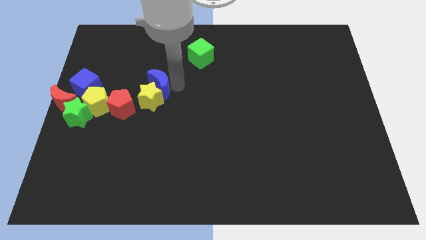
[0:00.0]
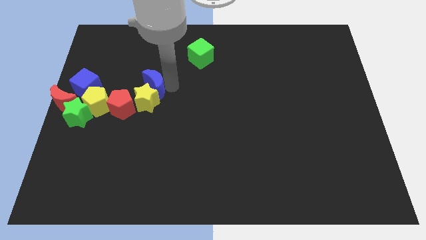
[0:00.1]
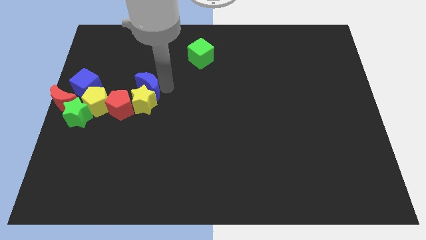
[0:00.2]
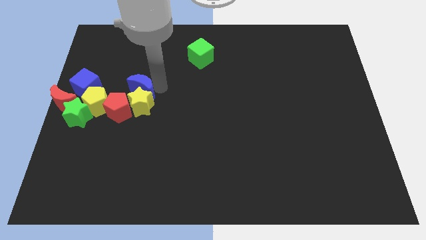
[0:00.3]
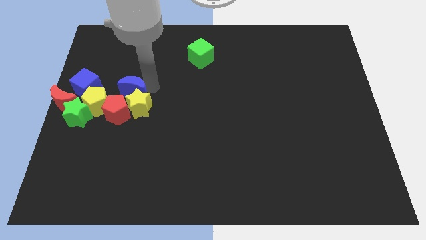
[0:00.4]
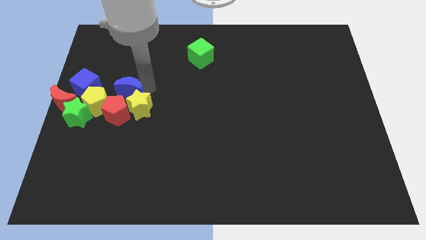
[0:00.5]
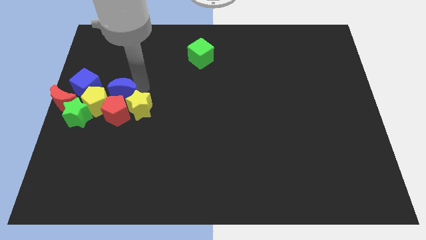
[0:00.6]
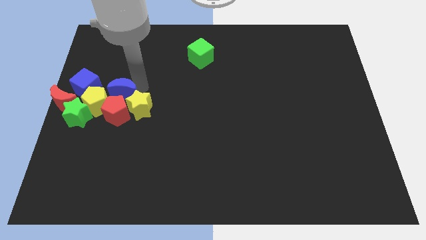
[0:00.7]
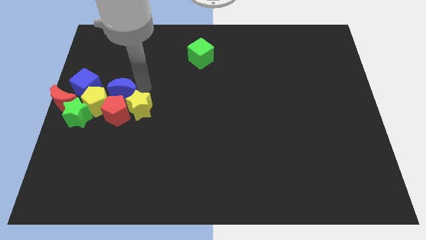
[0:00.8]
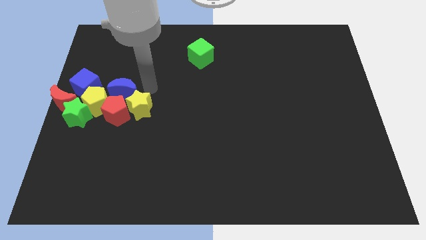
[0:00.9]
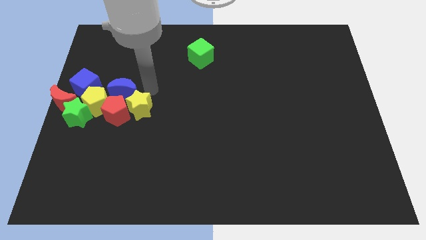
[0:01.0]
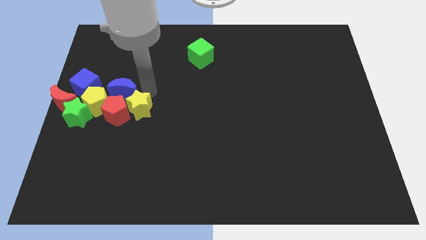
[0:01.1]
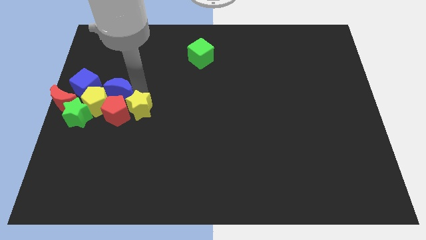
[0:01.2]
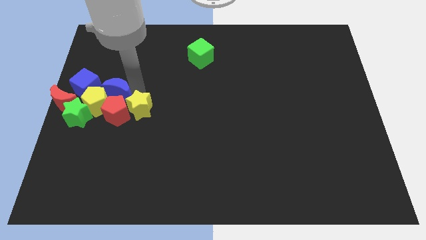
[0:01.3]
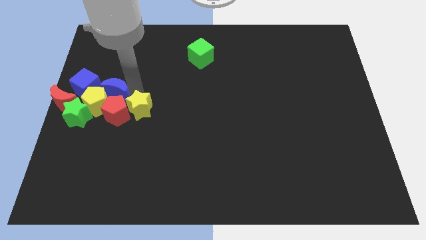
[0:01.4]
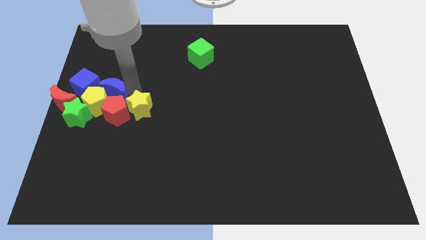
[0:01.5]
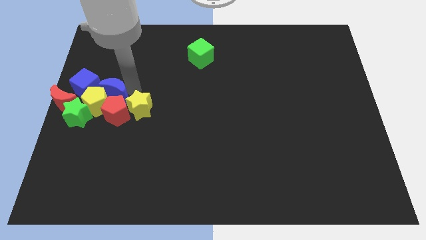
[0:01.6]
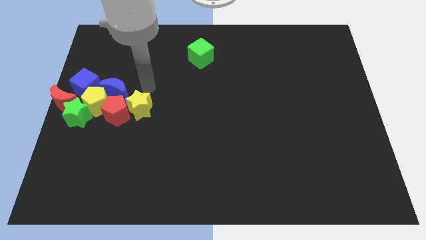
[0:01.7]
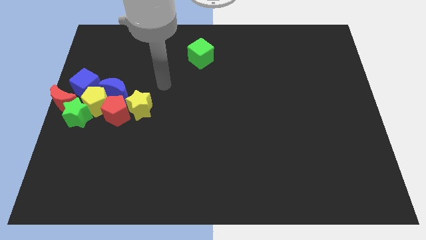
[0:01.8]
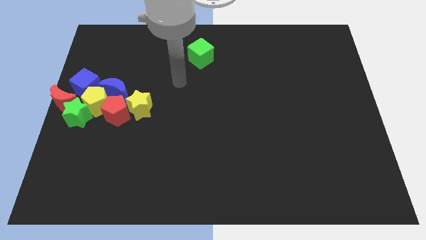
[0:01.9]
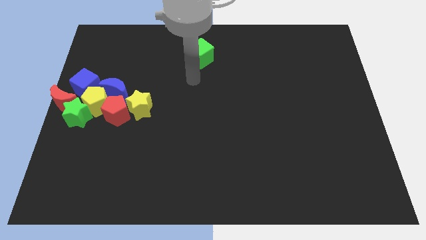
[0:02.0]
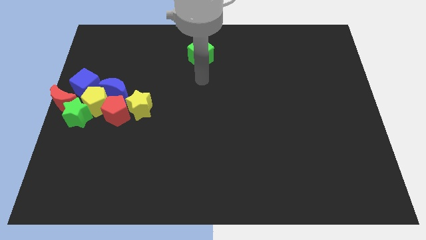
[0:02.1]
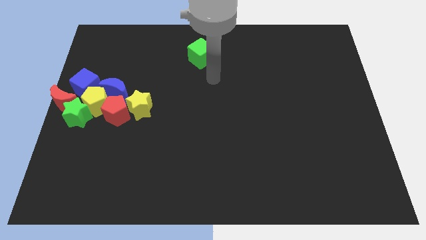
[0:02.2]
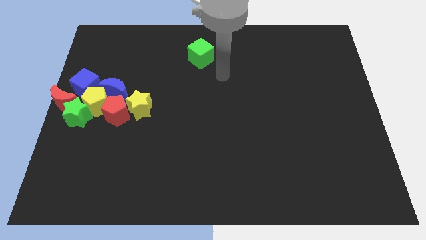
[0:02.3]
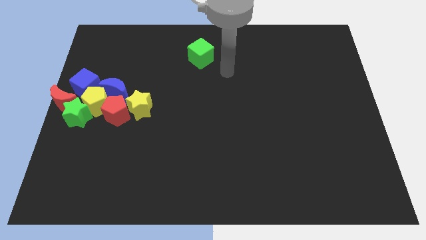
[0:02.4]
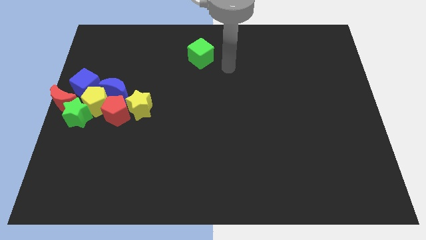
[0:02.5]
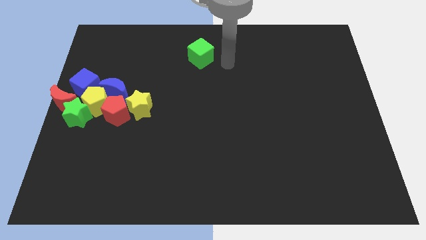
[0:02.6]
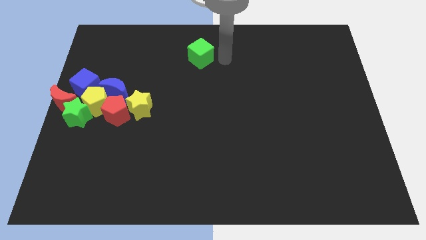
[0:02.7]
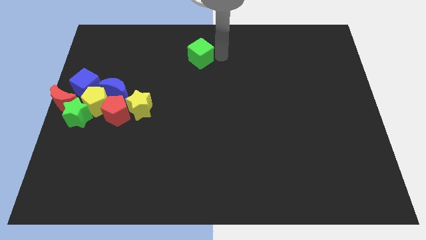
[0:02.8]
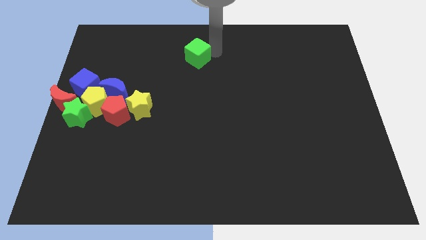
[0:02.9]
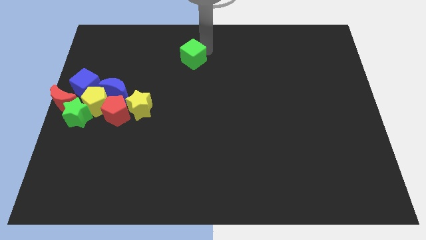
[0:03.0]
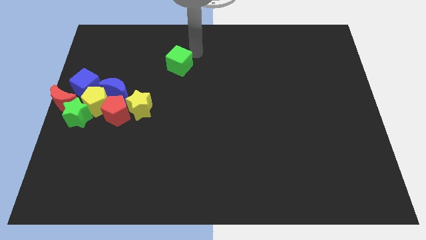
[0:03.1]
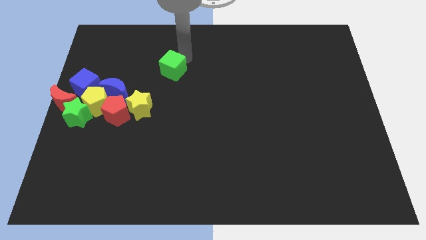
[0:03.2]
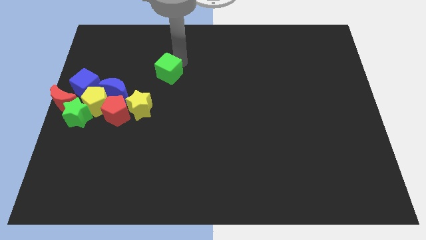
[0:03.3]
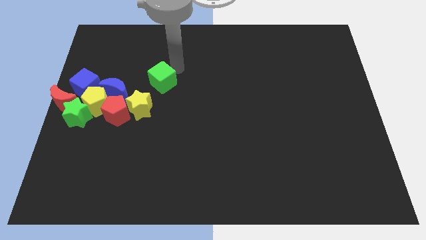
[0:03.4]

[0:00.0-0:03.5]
drag the green cube towards the group of blocks

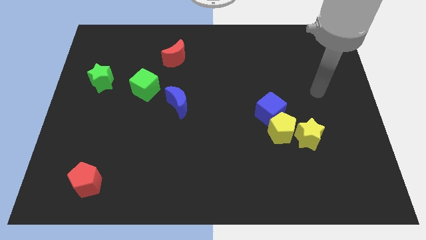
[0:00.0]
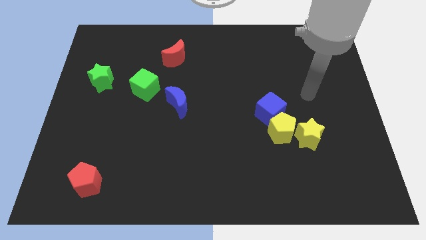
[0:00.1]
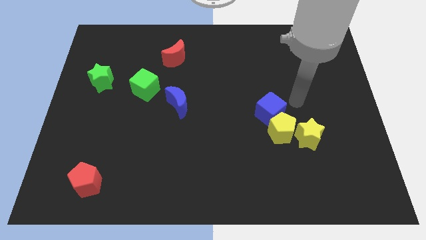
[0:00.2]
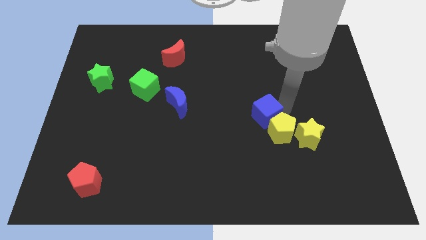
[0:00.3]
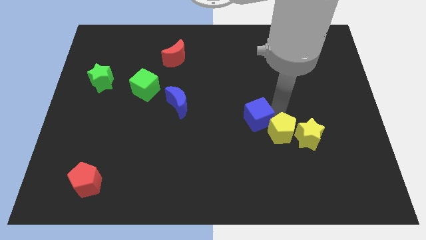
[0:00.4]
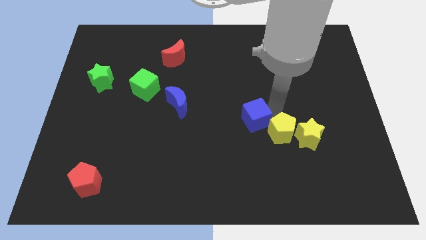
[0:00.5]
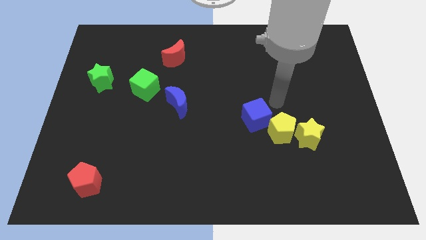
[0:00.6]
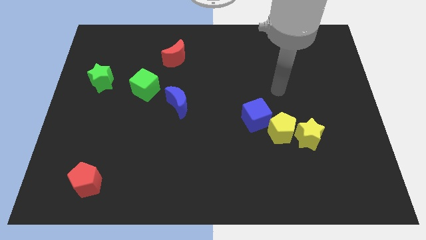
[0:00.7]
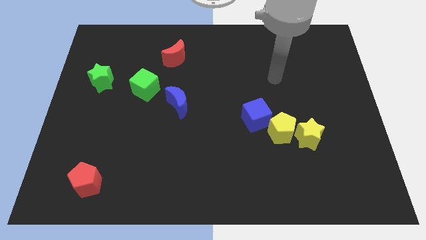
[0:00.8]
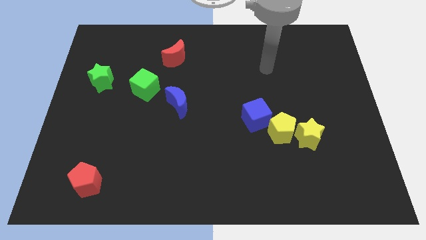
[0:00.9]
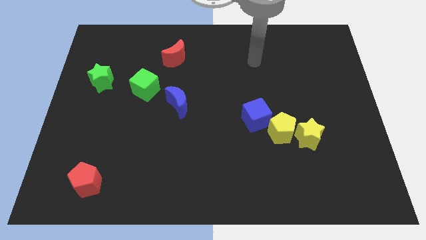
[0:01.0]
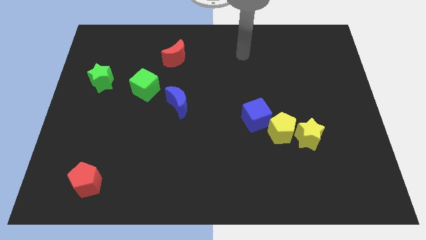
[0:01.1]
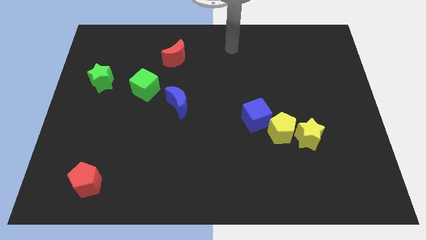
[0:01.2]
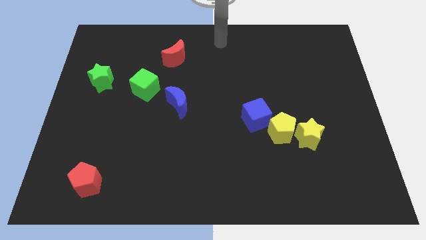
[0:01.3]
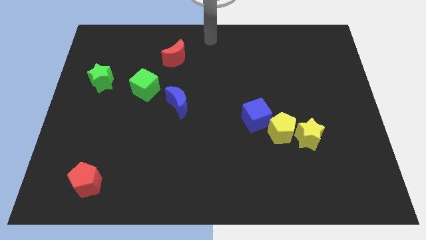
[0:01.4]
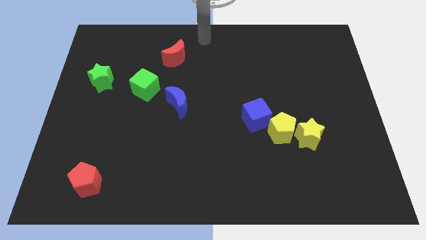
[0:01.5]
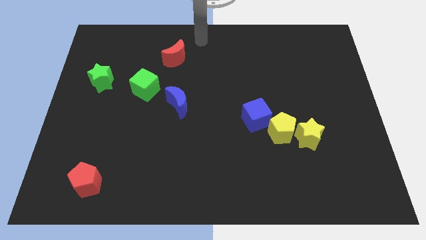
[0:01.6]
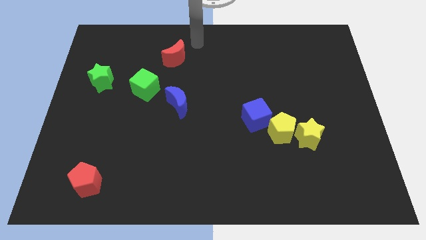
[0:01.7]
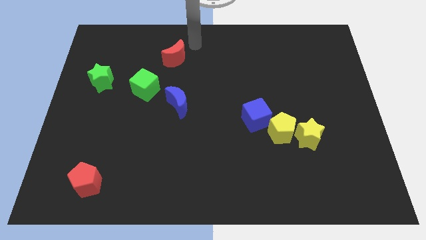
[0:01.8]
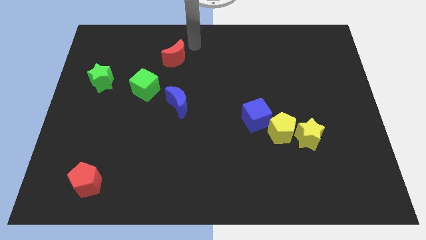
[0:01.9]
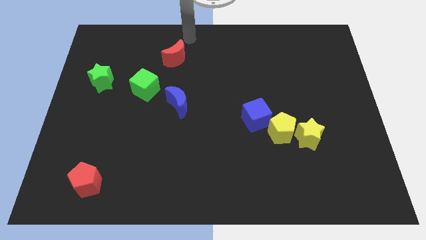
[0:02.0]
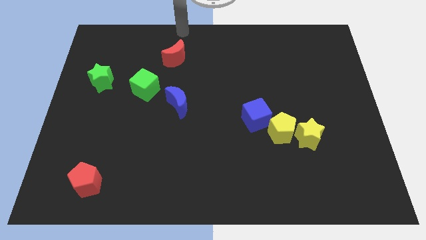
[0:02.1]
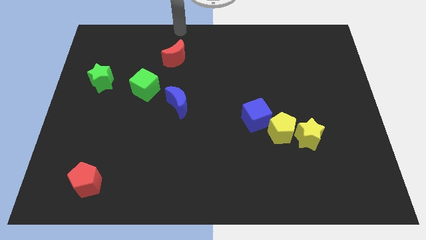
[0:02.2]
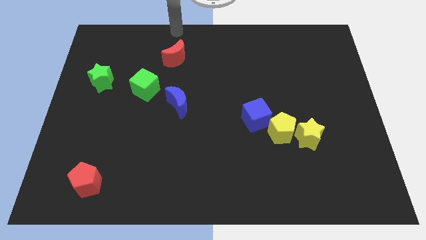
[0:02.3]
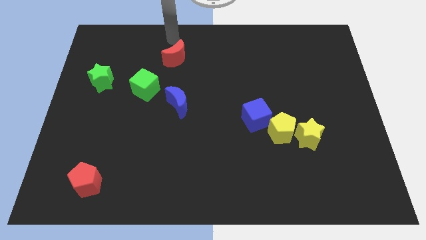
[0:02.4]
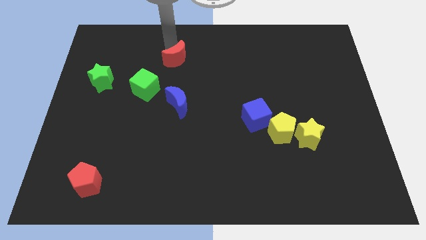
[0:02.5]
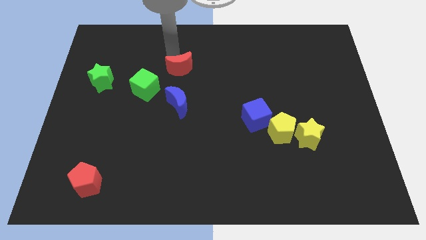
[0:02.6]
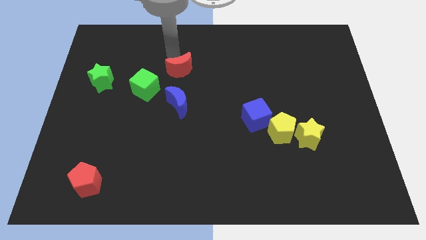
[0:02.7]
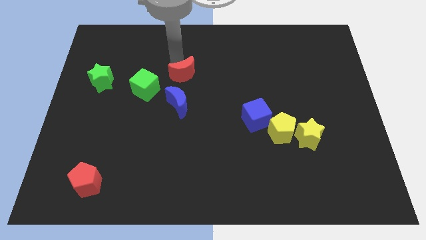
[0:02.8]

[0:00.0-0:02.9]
push the red crescent above blue crescent

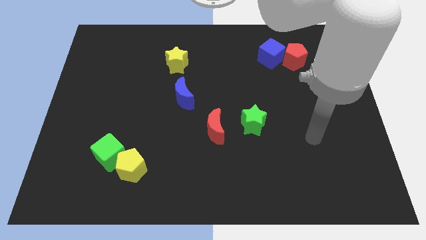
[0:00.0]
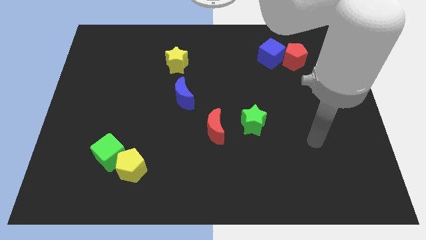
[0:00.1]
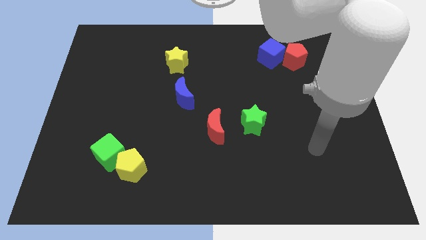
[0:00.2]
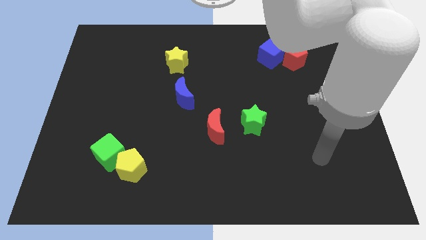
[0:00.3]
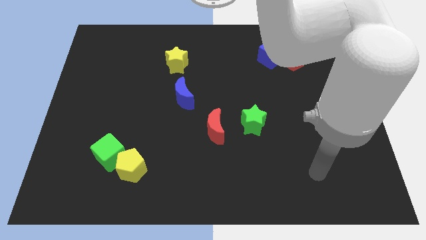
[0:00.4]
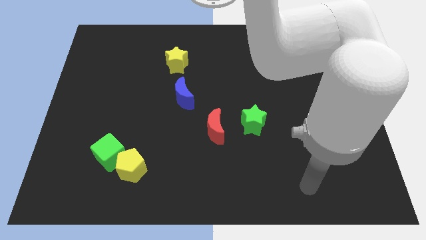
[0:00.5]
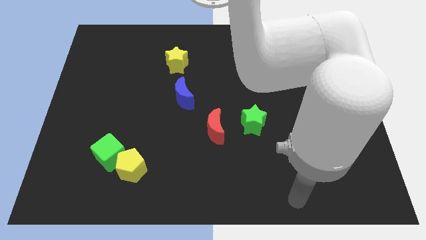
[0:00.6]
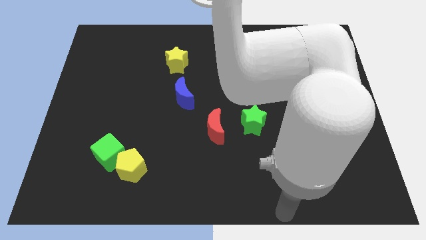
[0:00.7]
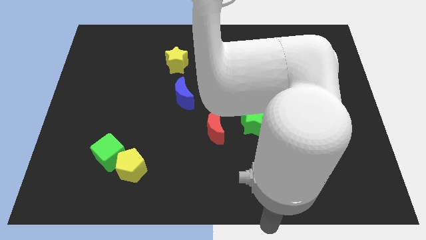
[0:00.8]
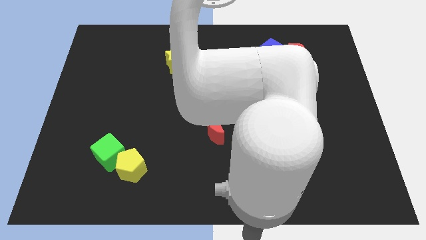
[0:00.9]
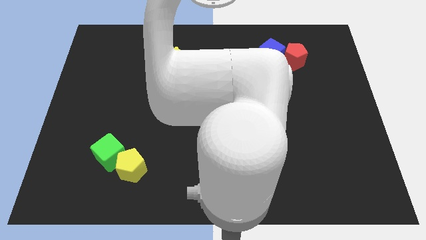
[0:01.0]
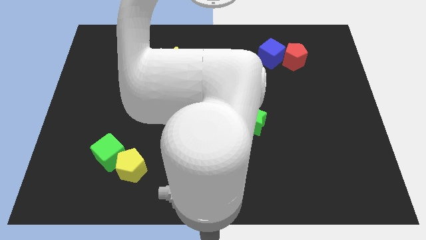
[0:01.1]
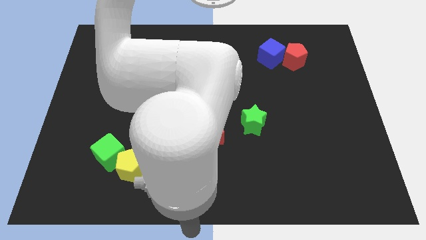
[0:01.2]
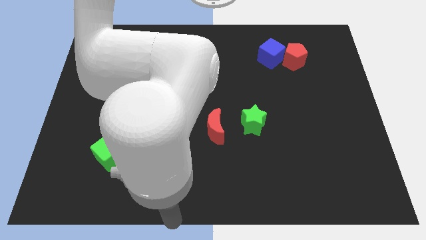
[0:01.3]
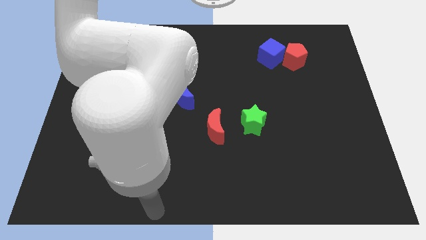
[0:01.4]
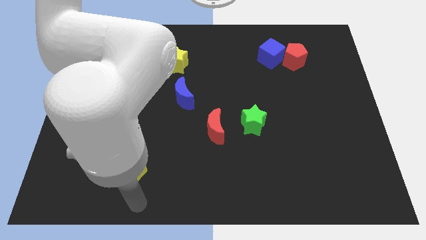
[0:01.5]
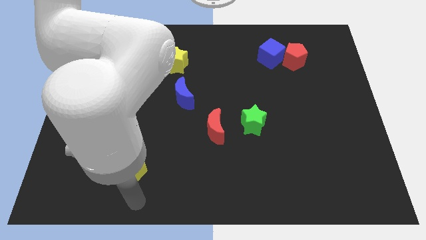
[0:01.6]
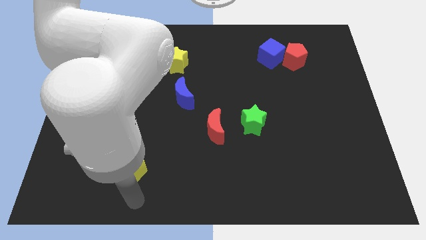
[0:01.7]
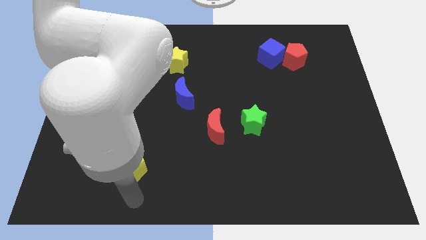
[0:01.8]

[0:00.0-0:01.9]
place your arm to the bottom of the yellow pentagon

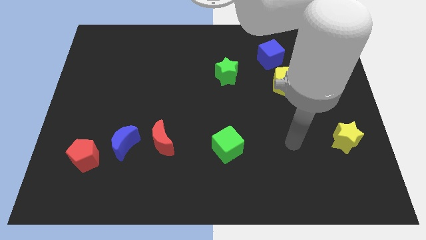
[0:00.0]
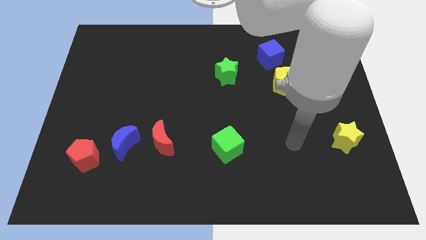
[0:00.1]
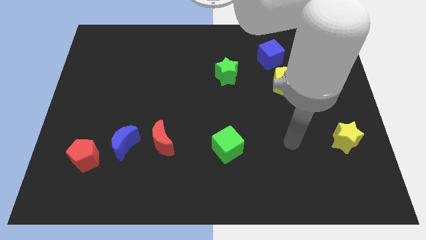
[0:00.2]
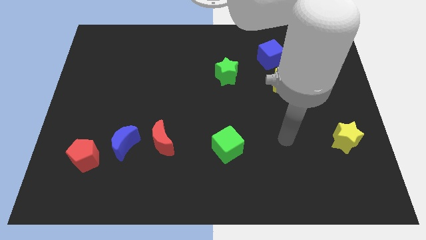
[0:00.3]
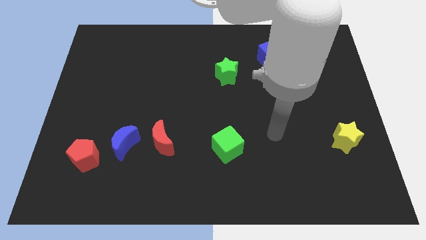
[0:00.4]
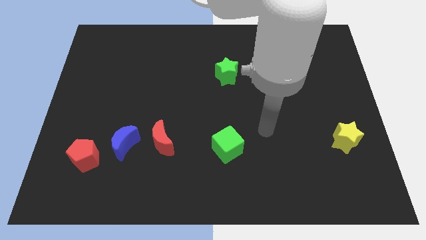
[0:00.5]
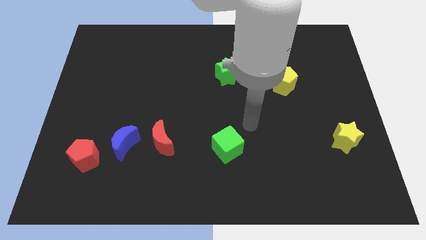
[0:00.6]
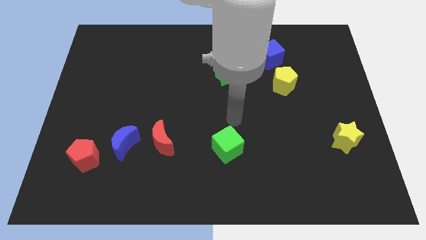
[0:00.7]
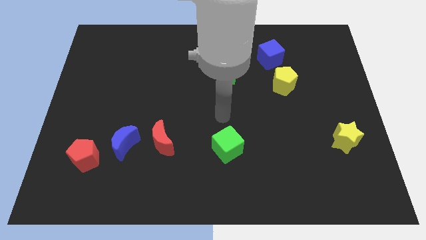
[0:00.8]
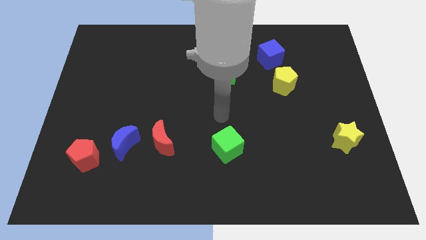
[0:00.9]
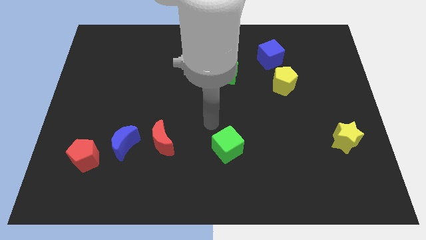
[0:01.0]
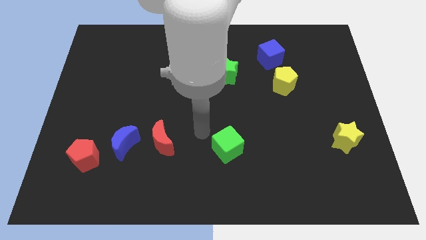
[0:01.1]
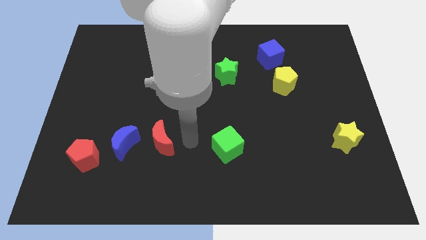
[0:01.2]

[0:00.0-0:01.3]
move your arm towards the green cube
